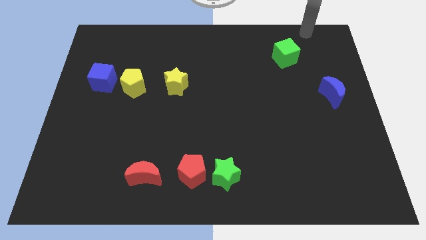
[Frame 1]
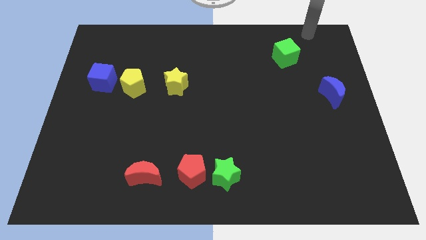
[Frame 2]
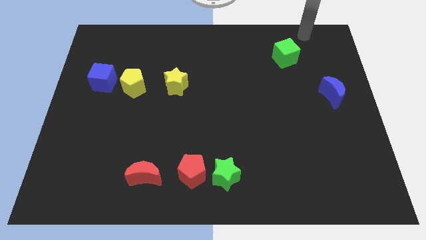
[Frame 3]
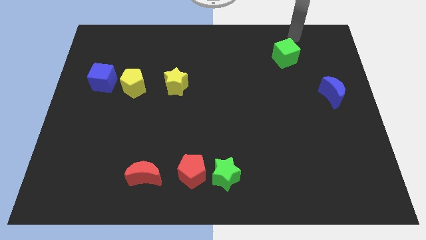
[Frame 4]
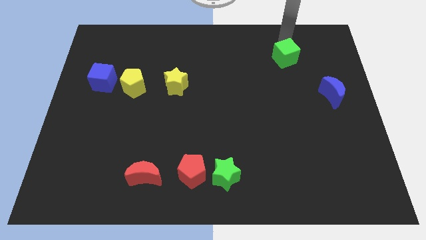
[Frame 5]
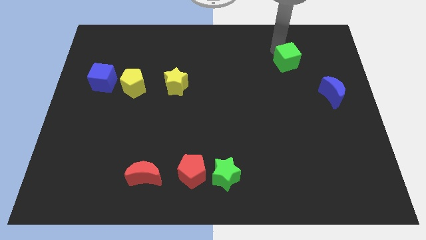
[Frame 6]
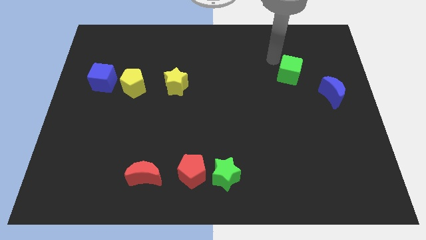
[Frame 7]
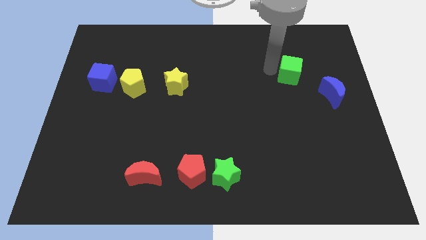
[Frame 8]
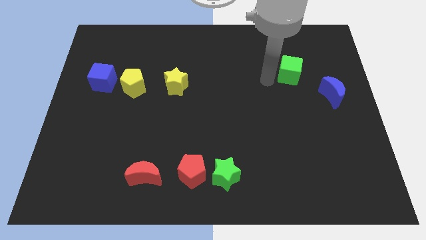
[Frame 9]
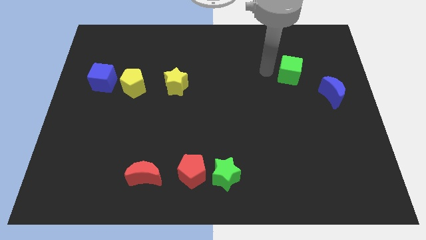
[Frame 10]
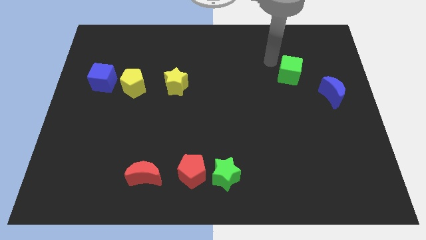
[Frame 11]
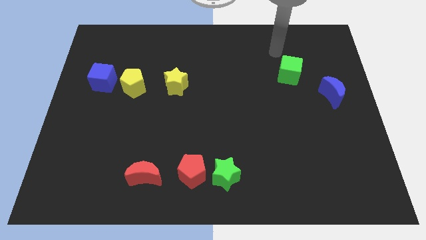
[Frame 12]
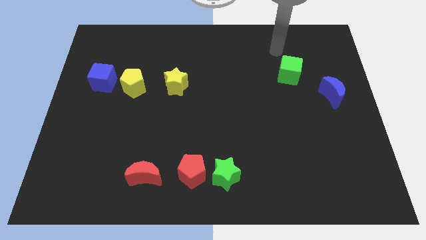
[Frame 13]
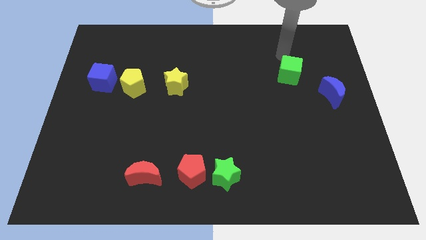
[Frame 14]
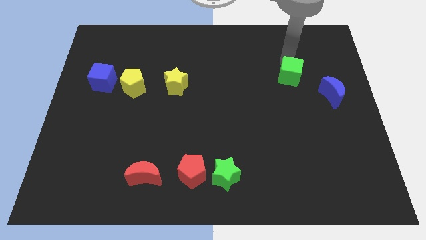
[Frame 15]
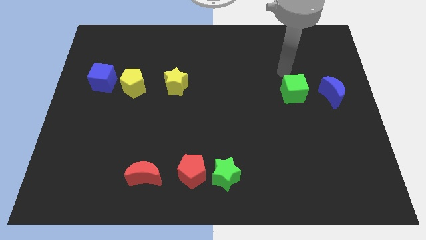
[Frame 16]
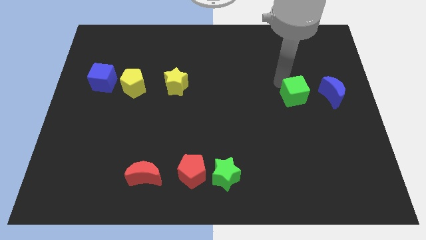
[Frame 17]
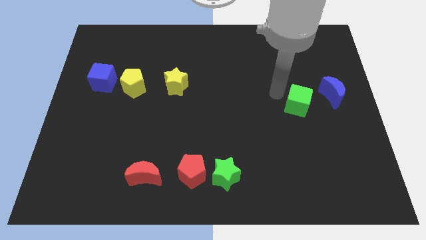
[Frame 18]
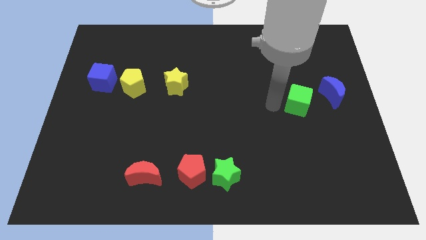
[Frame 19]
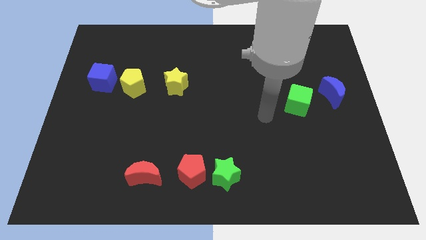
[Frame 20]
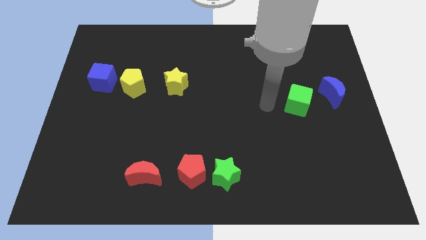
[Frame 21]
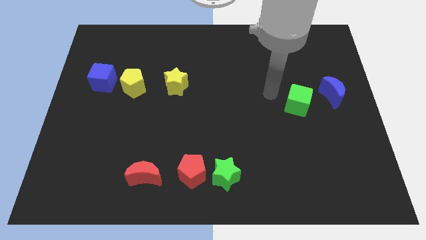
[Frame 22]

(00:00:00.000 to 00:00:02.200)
slightly push the green cube downwards

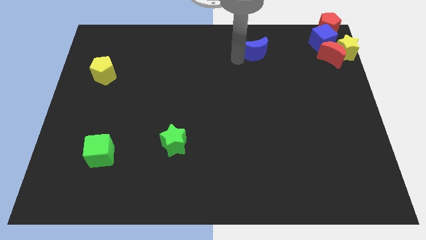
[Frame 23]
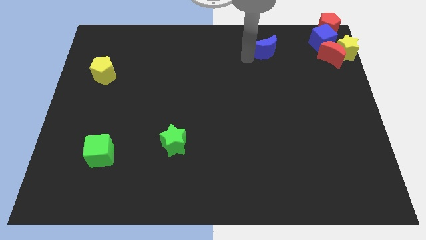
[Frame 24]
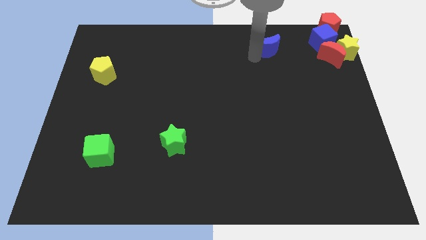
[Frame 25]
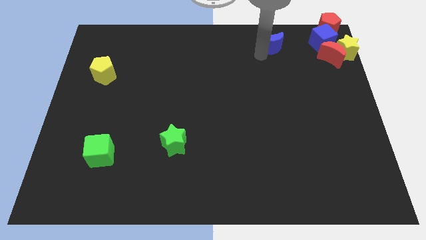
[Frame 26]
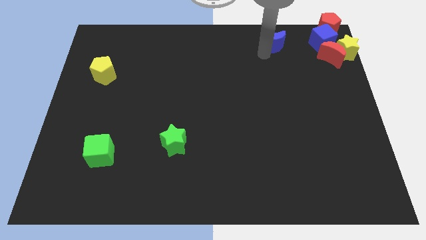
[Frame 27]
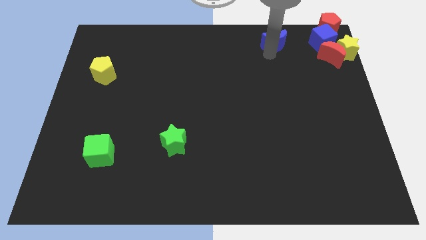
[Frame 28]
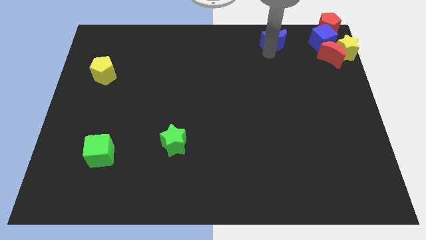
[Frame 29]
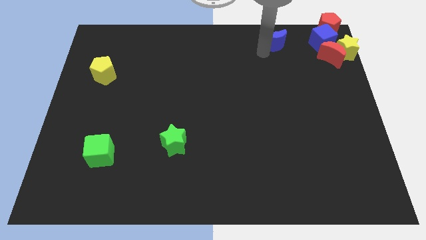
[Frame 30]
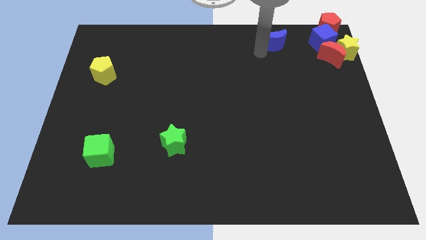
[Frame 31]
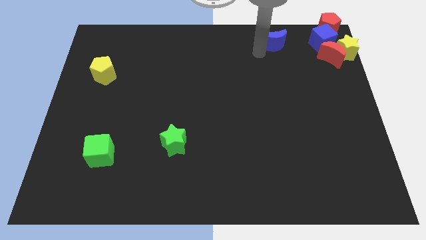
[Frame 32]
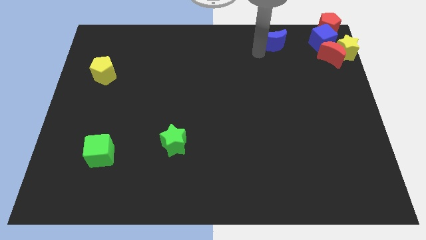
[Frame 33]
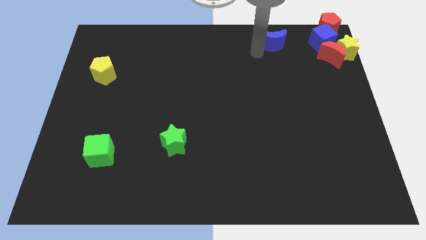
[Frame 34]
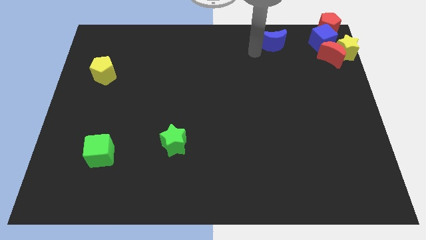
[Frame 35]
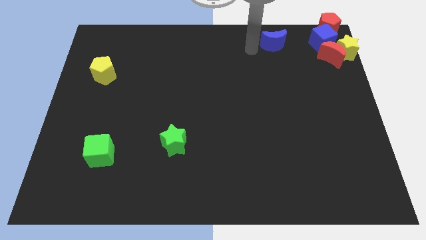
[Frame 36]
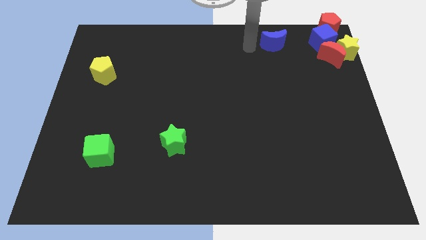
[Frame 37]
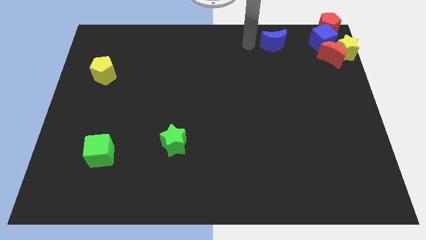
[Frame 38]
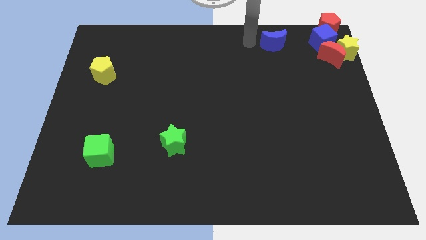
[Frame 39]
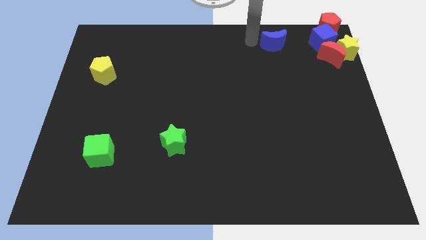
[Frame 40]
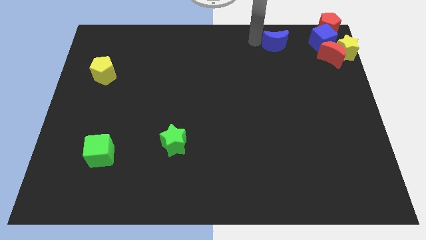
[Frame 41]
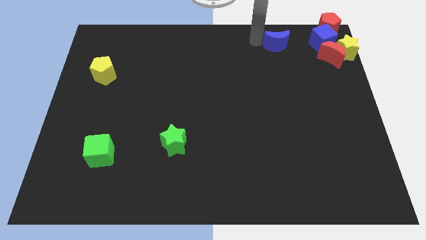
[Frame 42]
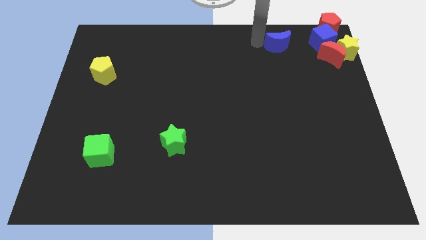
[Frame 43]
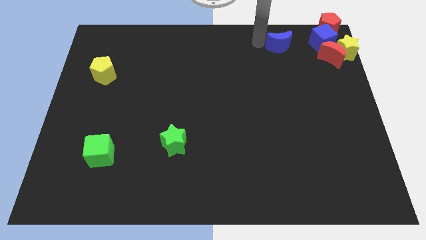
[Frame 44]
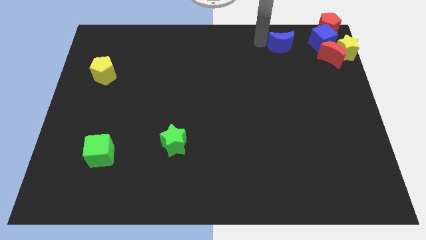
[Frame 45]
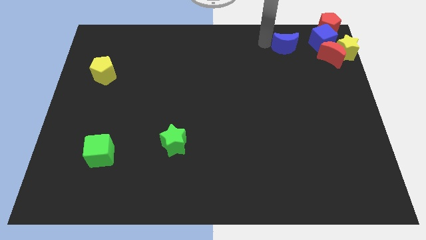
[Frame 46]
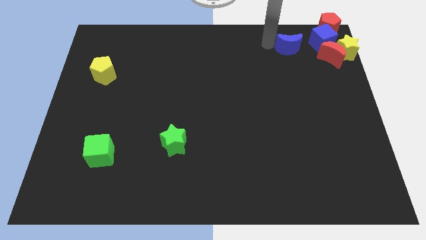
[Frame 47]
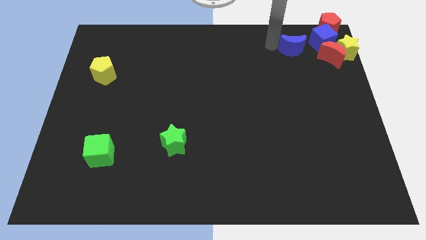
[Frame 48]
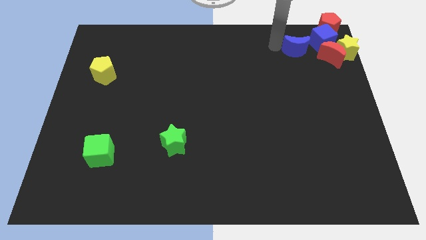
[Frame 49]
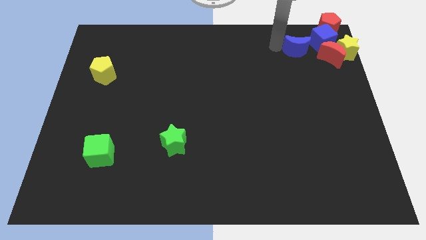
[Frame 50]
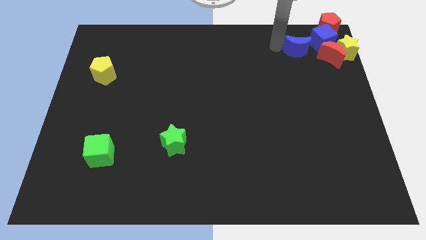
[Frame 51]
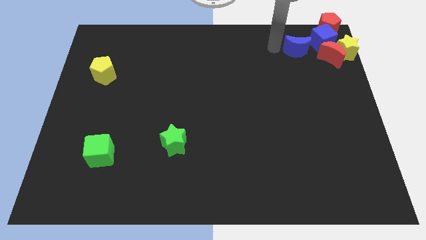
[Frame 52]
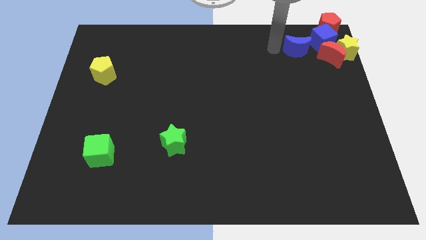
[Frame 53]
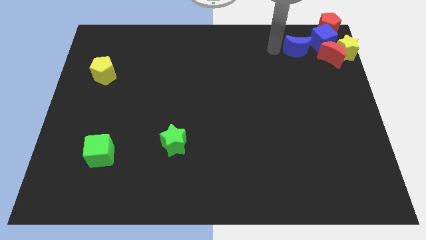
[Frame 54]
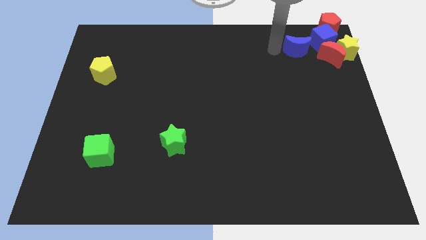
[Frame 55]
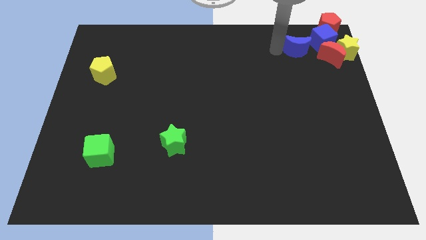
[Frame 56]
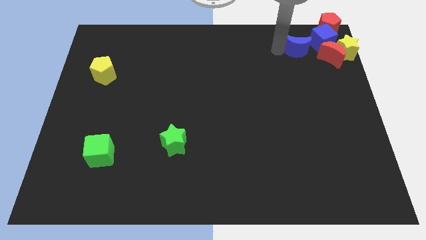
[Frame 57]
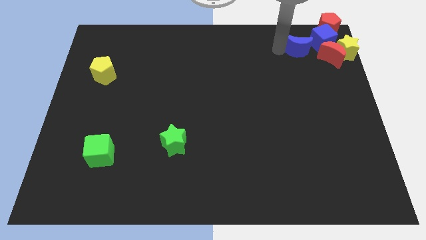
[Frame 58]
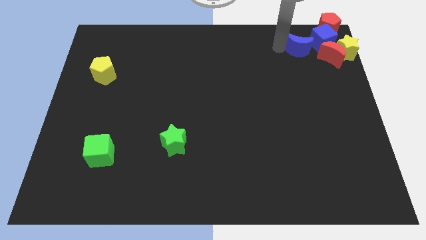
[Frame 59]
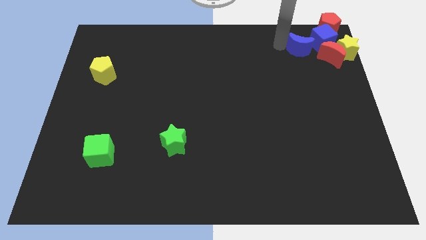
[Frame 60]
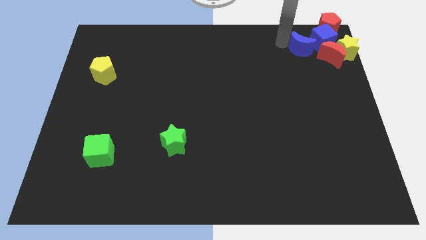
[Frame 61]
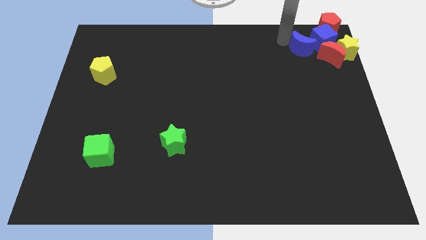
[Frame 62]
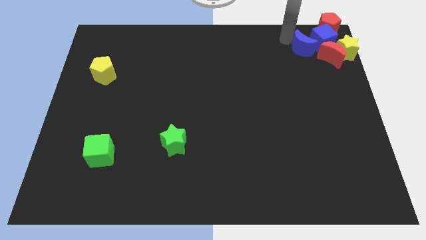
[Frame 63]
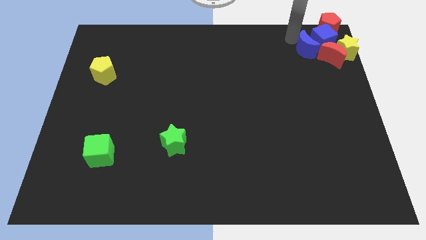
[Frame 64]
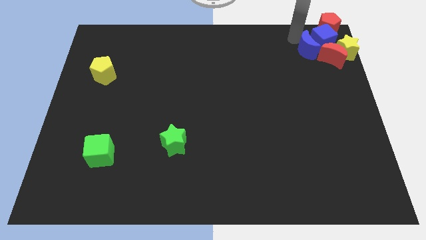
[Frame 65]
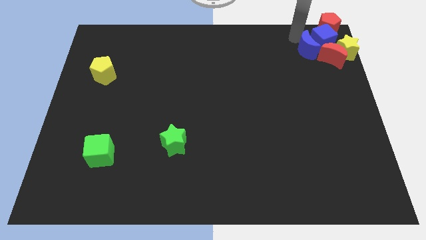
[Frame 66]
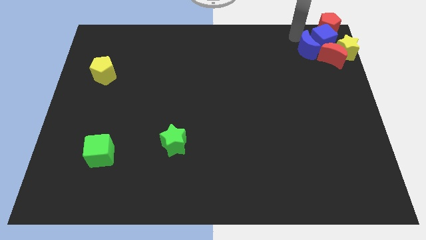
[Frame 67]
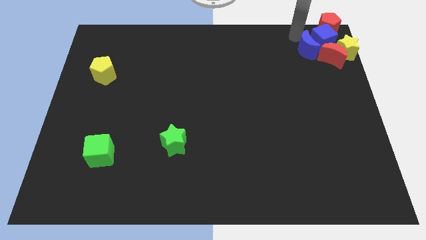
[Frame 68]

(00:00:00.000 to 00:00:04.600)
push the blue moon into the blue cube

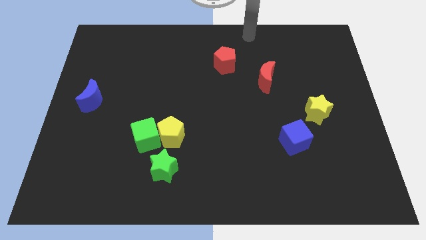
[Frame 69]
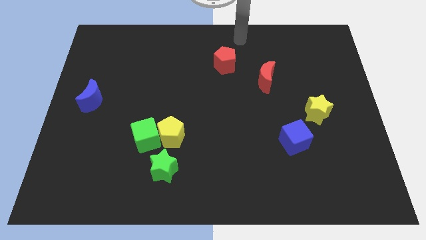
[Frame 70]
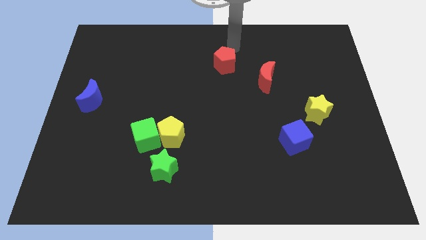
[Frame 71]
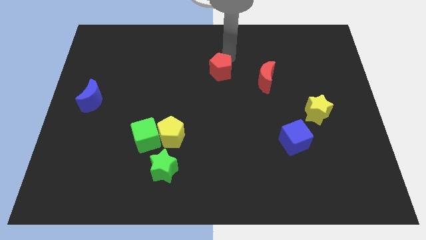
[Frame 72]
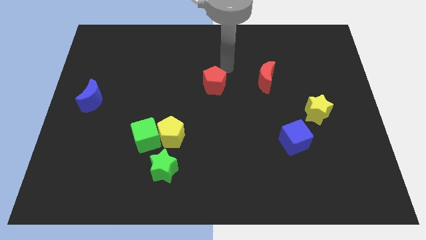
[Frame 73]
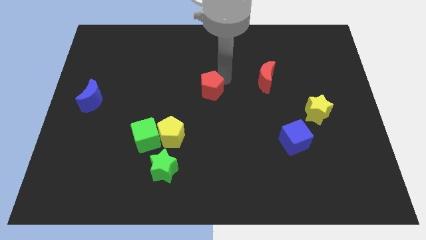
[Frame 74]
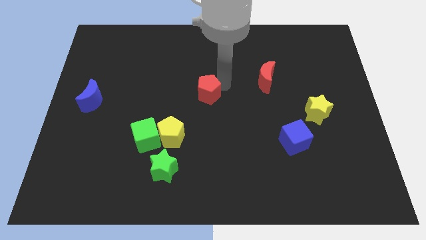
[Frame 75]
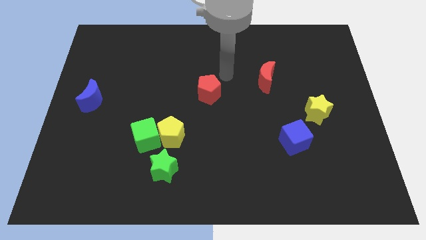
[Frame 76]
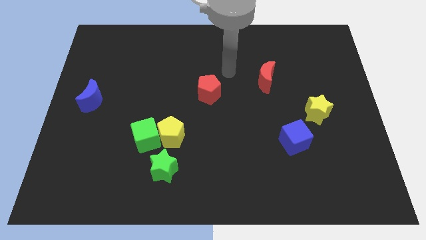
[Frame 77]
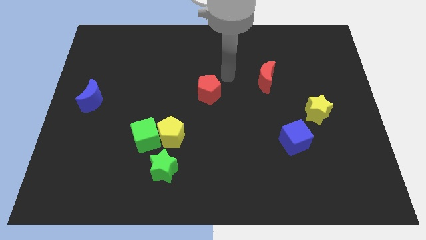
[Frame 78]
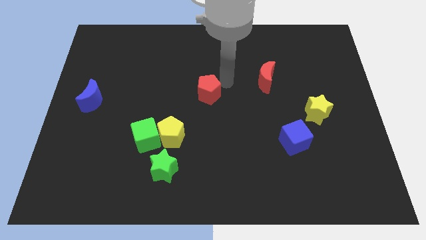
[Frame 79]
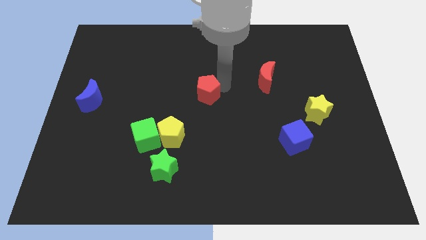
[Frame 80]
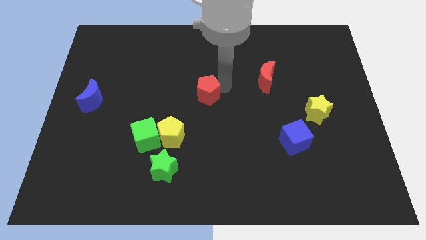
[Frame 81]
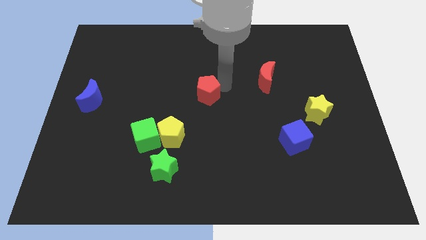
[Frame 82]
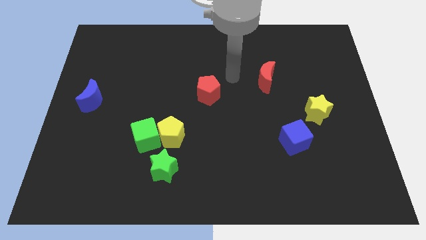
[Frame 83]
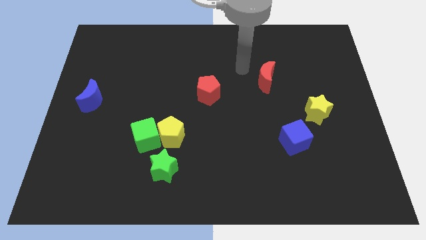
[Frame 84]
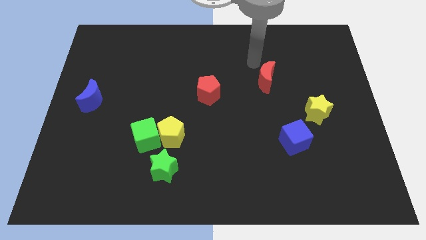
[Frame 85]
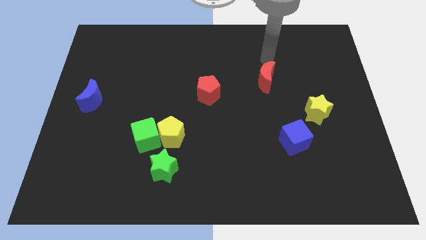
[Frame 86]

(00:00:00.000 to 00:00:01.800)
move red pentagon towards the yellow pentagon

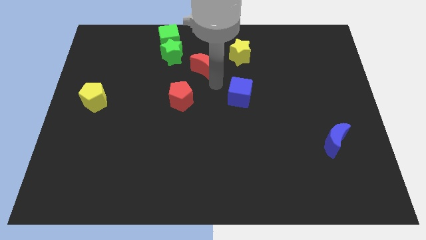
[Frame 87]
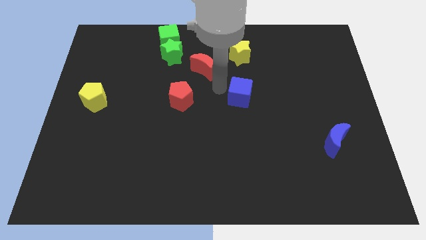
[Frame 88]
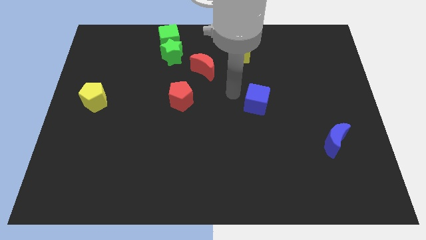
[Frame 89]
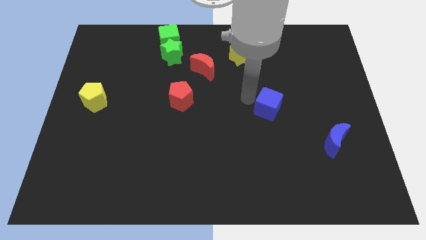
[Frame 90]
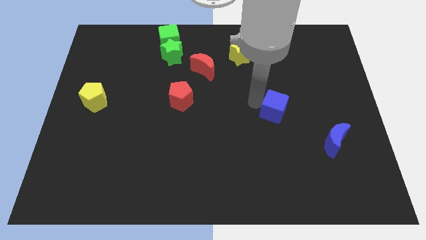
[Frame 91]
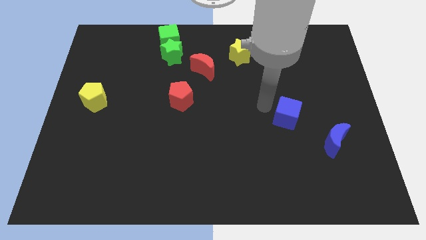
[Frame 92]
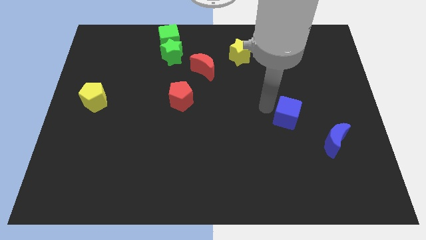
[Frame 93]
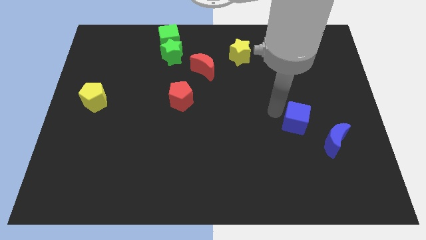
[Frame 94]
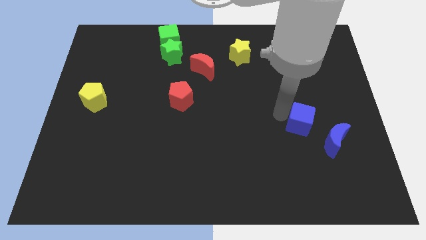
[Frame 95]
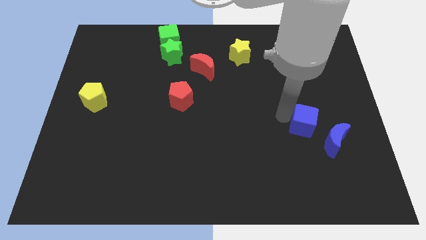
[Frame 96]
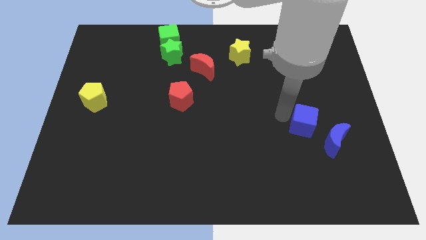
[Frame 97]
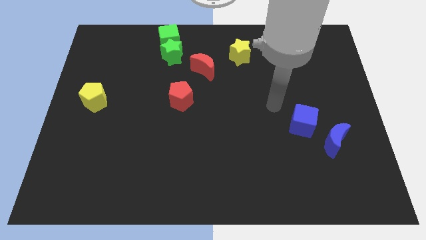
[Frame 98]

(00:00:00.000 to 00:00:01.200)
move the blue cube towards the left side of the blue crescent
